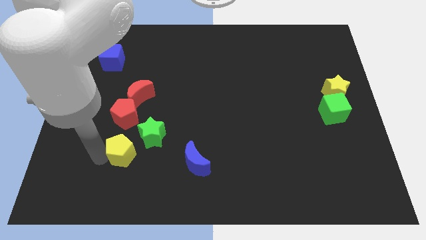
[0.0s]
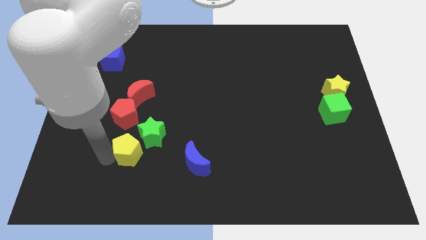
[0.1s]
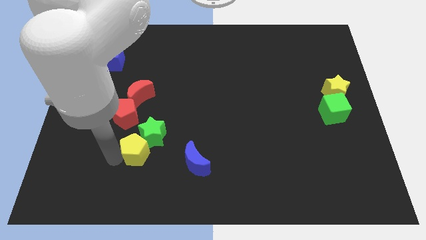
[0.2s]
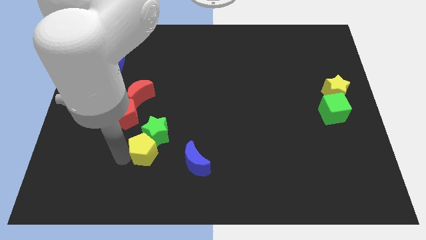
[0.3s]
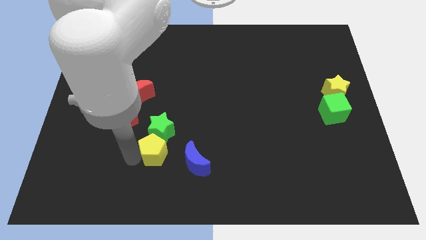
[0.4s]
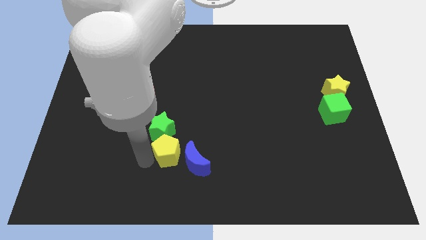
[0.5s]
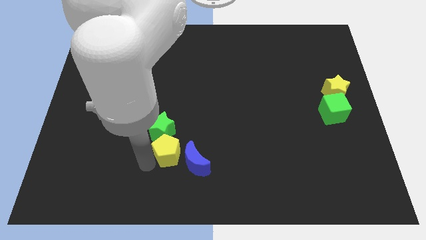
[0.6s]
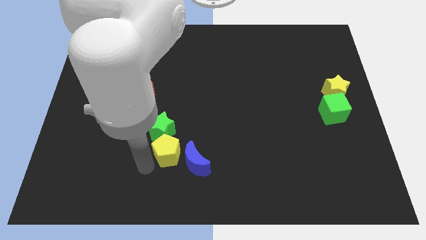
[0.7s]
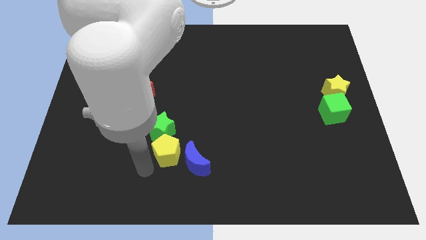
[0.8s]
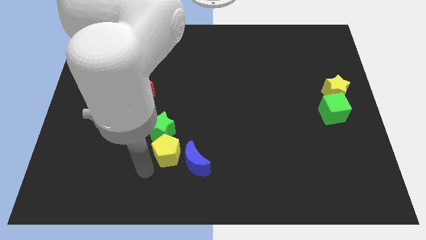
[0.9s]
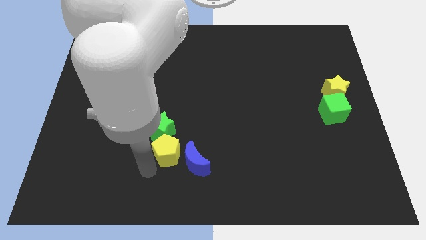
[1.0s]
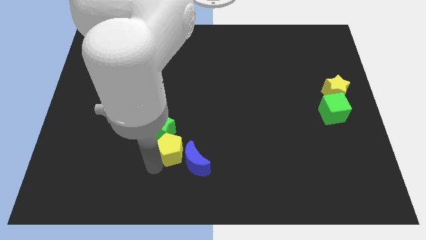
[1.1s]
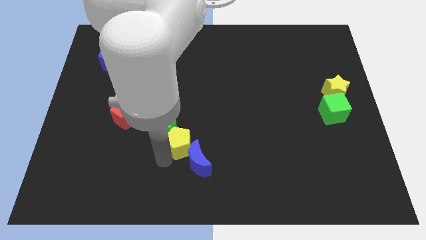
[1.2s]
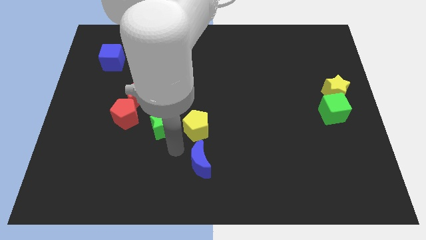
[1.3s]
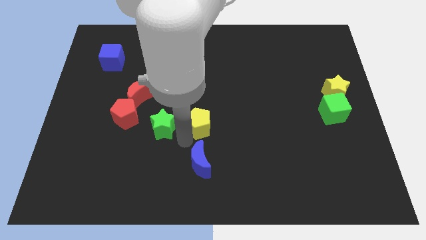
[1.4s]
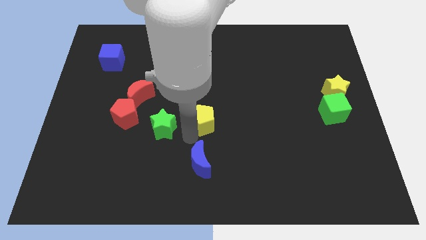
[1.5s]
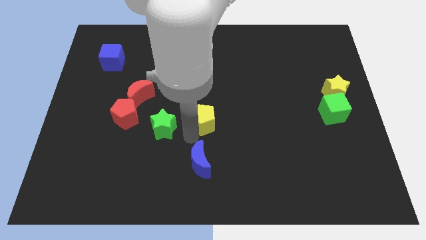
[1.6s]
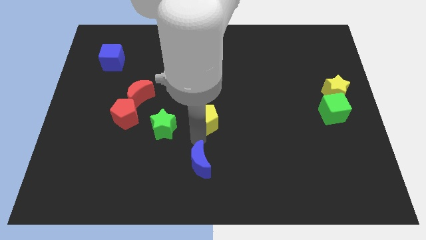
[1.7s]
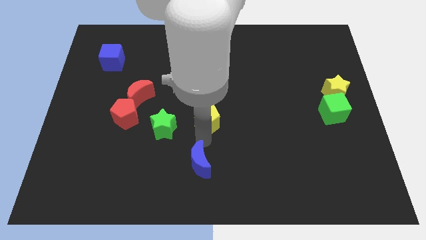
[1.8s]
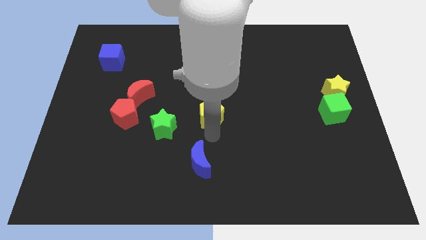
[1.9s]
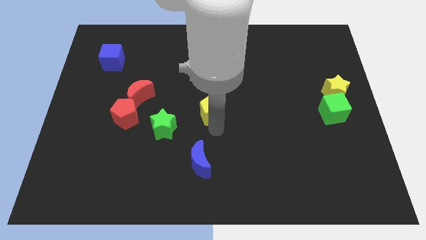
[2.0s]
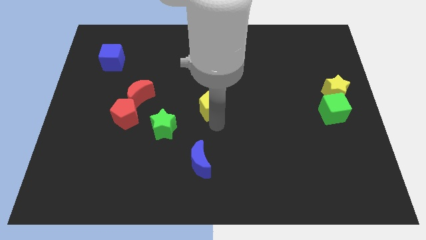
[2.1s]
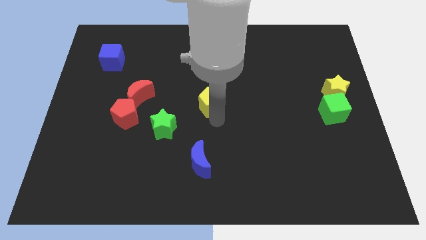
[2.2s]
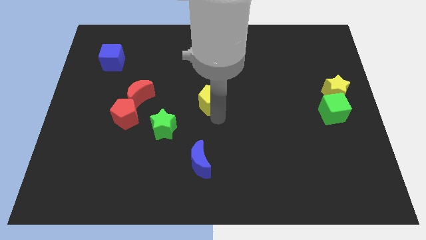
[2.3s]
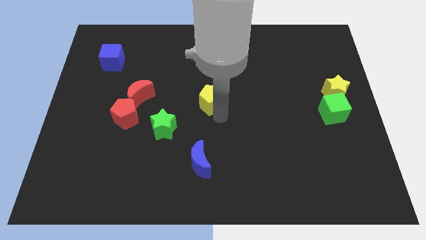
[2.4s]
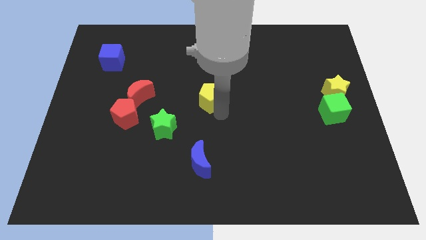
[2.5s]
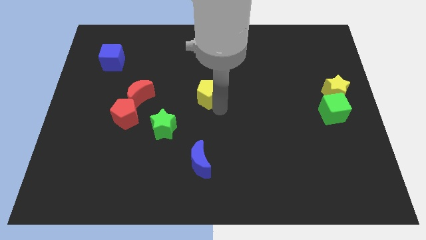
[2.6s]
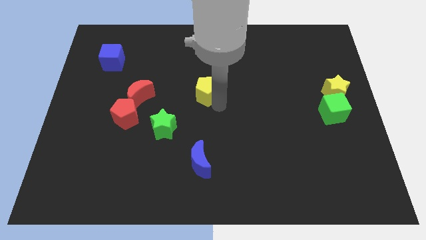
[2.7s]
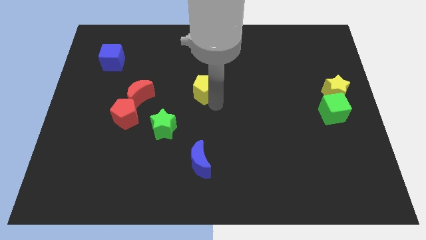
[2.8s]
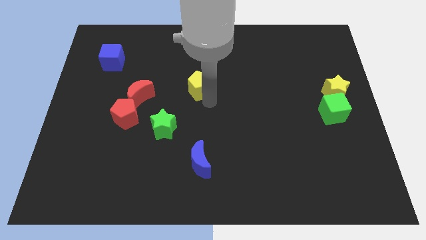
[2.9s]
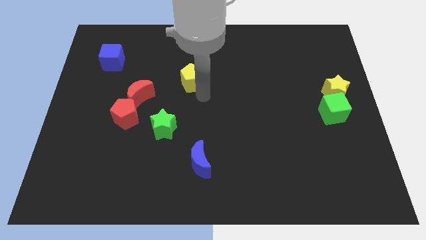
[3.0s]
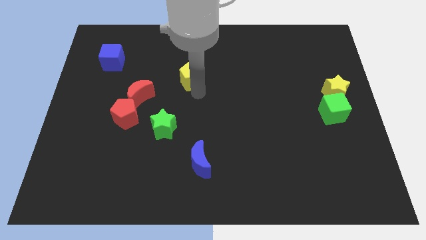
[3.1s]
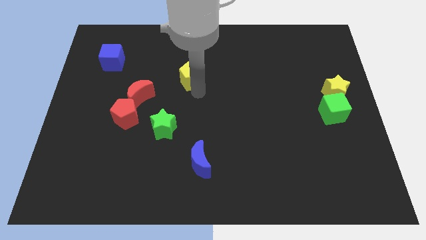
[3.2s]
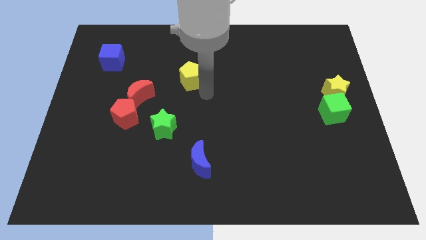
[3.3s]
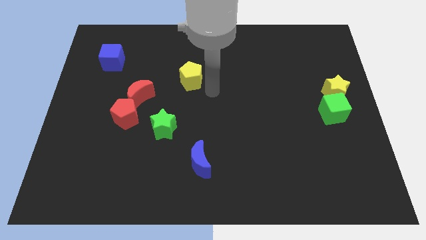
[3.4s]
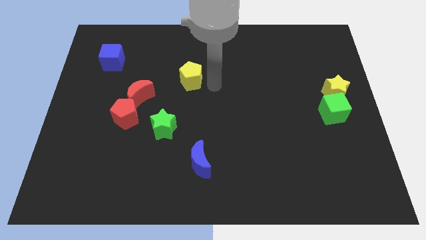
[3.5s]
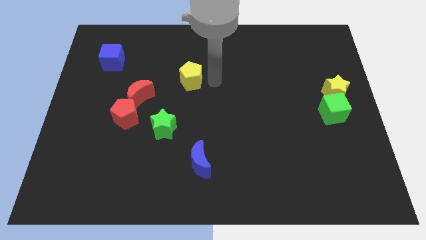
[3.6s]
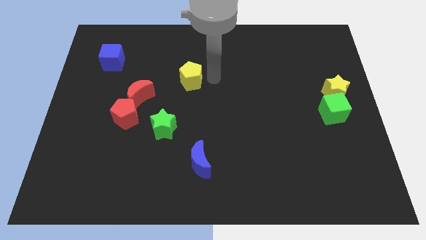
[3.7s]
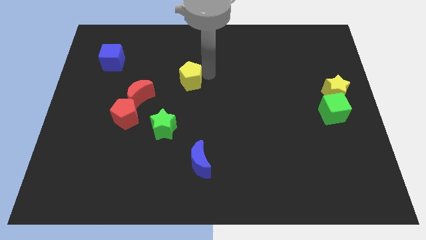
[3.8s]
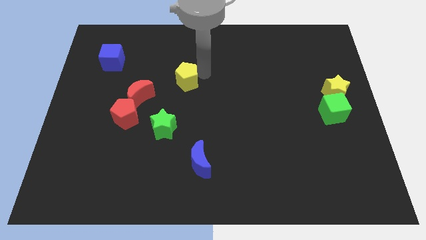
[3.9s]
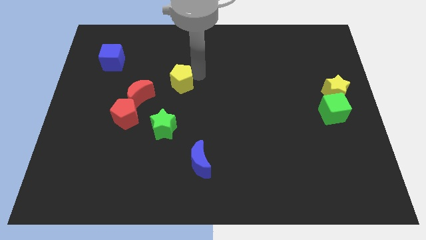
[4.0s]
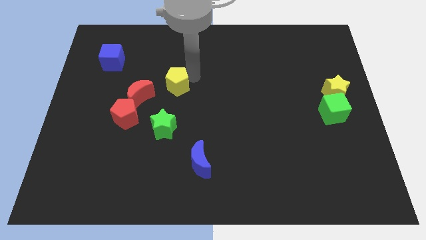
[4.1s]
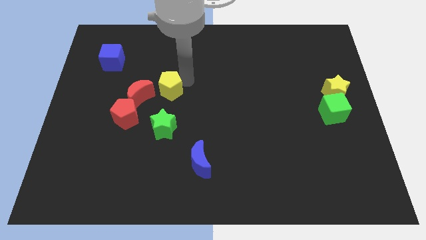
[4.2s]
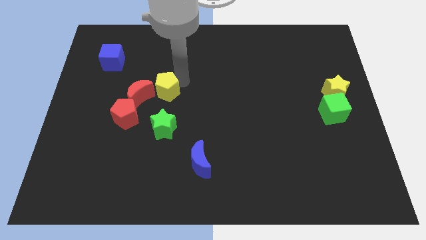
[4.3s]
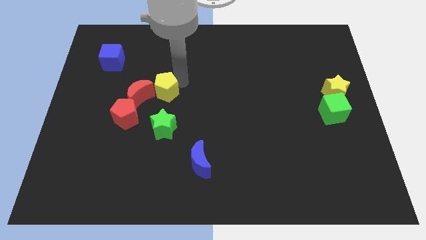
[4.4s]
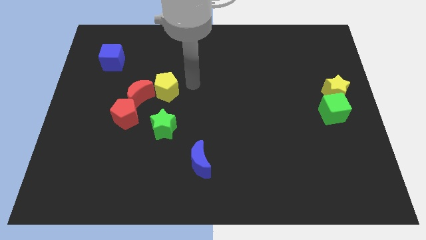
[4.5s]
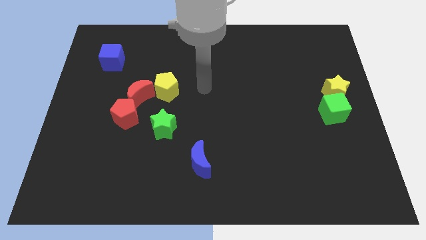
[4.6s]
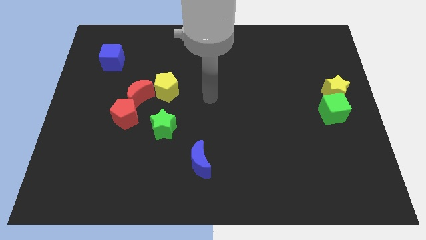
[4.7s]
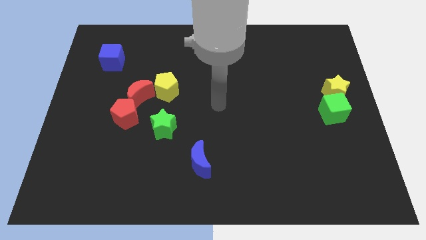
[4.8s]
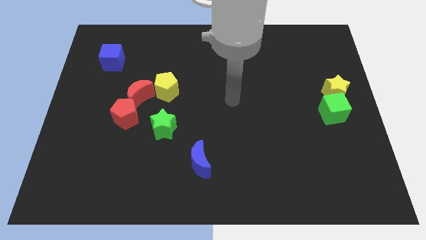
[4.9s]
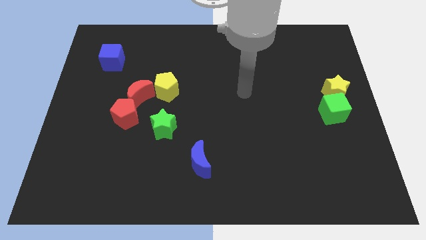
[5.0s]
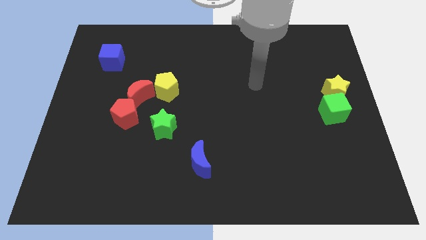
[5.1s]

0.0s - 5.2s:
place the yellow pentagon at the top of the green star

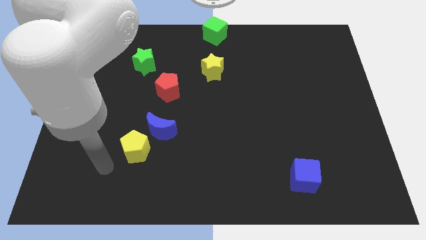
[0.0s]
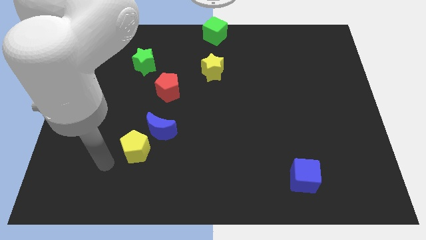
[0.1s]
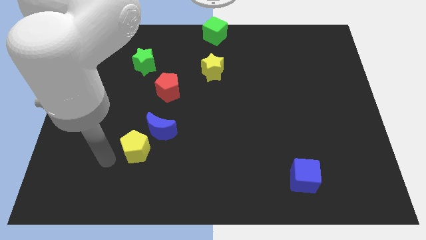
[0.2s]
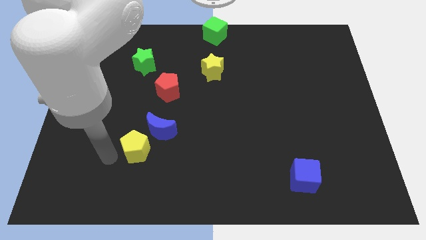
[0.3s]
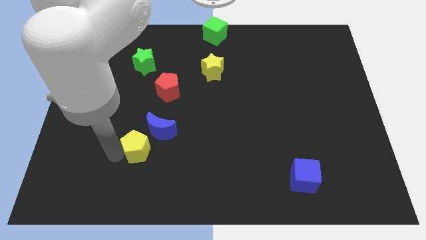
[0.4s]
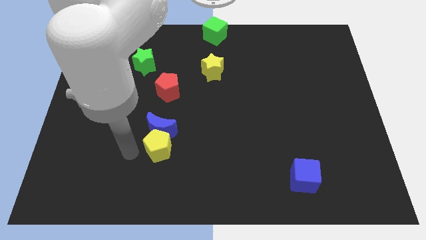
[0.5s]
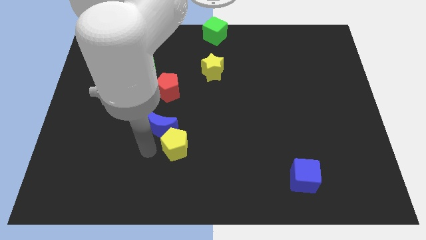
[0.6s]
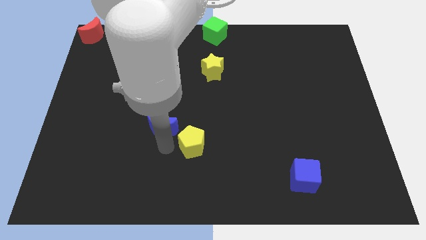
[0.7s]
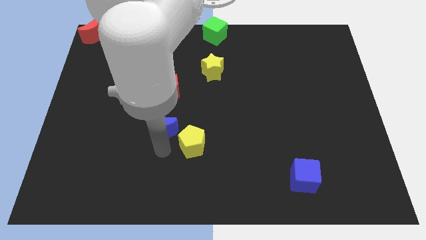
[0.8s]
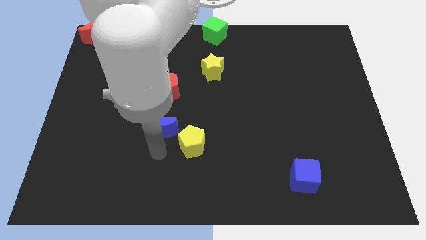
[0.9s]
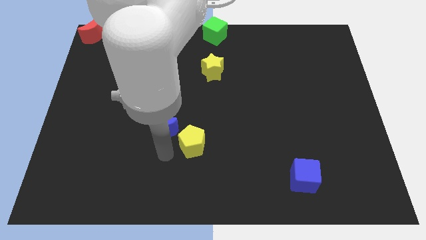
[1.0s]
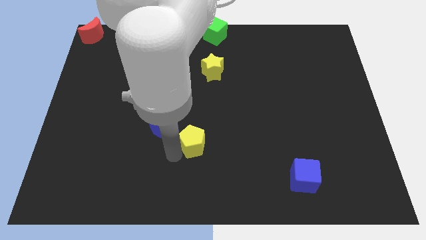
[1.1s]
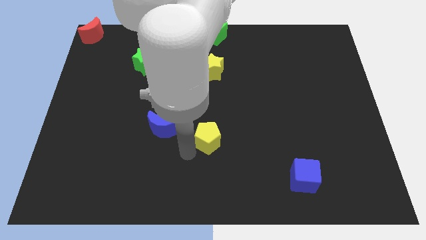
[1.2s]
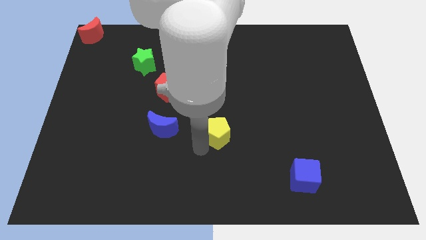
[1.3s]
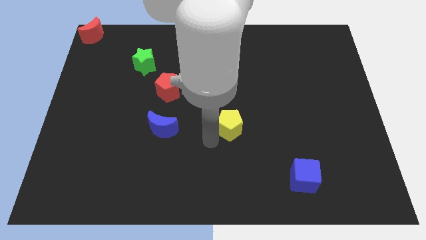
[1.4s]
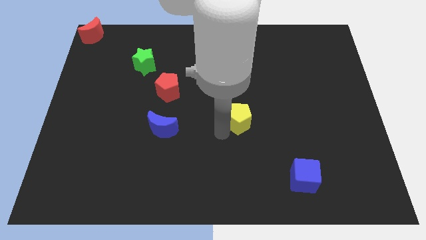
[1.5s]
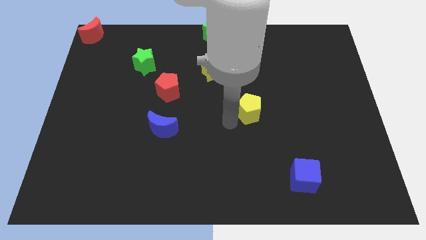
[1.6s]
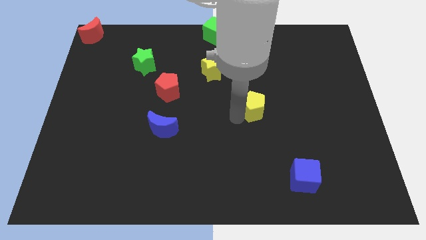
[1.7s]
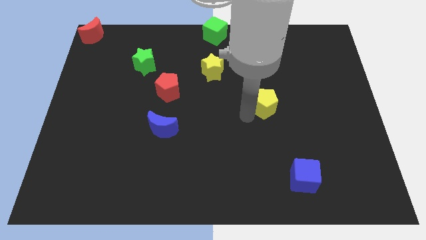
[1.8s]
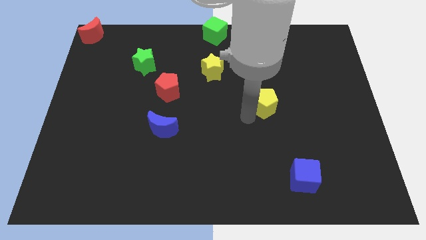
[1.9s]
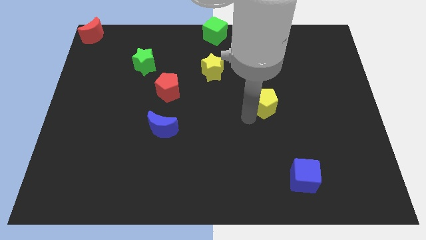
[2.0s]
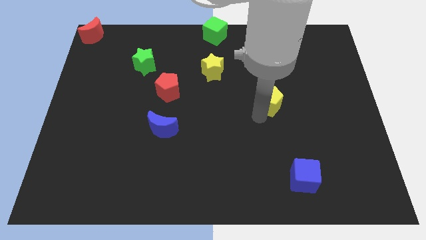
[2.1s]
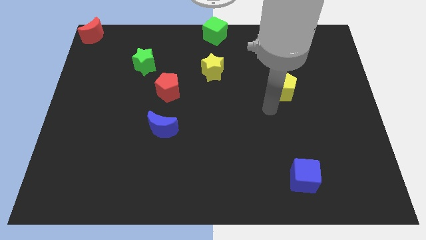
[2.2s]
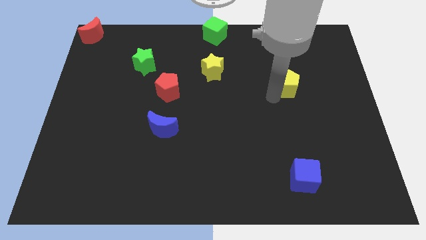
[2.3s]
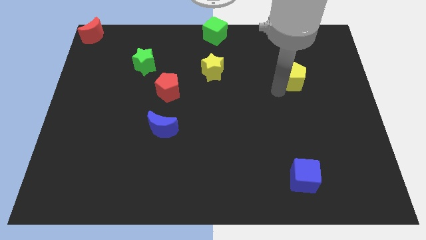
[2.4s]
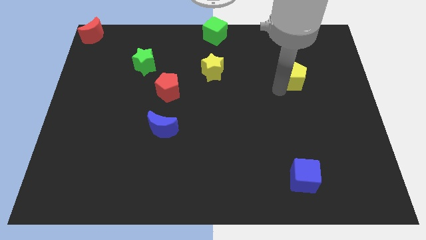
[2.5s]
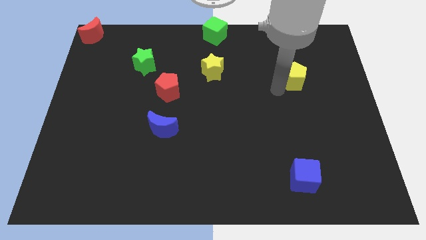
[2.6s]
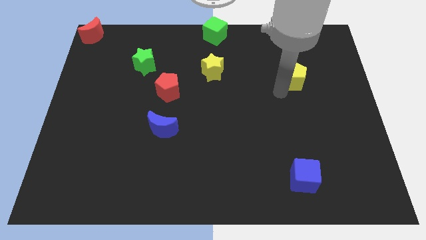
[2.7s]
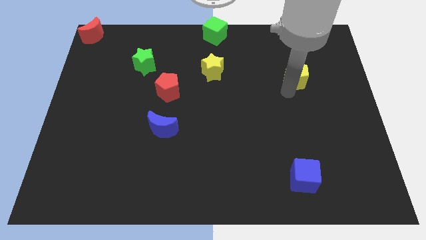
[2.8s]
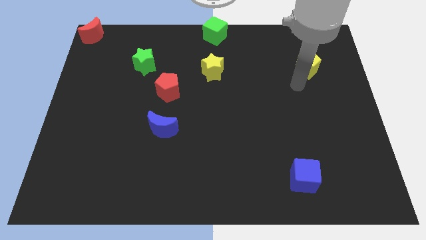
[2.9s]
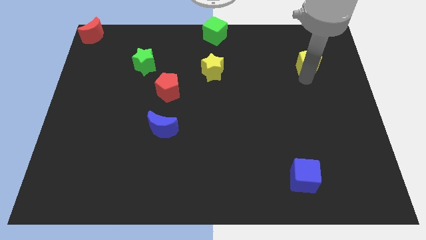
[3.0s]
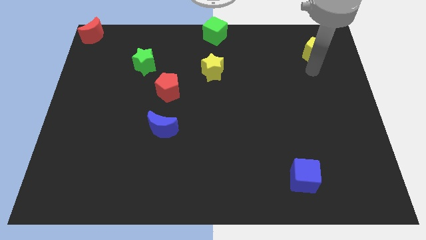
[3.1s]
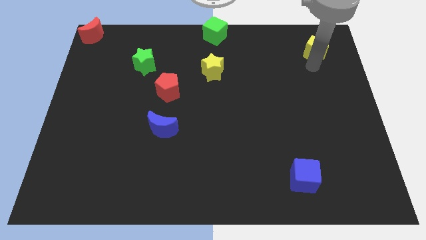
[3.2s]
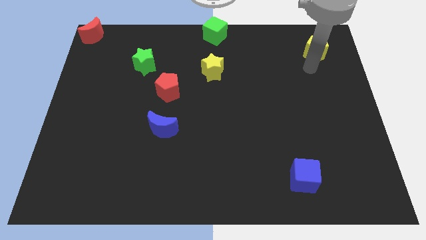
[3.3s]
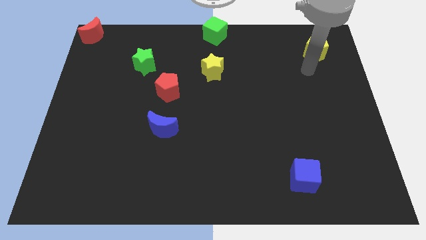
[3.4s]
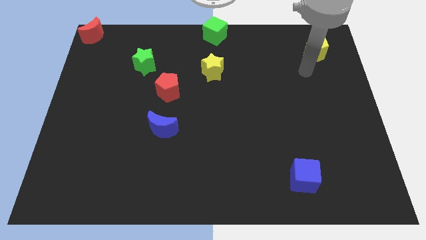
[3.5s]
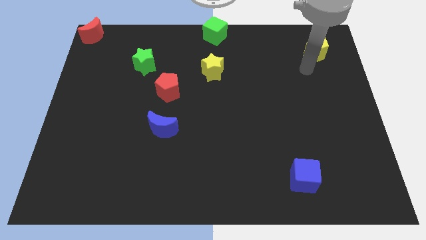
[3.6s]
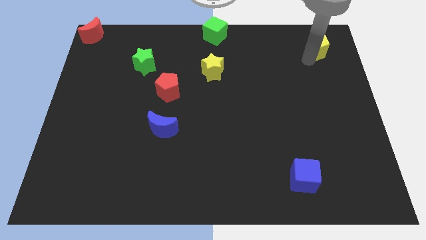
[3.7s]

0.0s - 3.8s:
place the yellow pentagon vertically above the blue cube

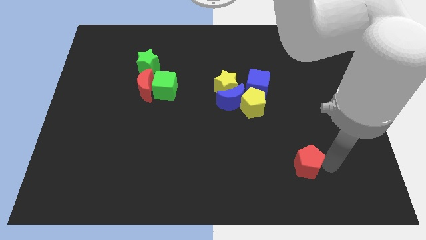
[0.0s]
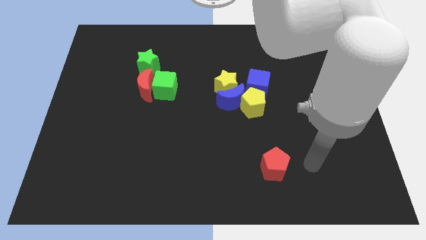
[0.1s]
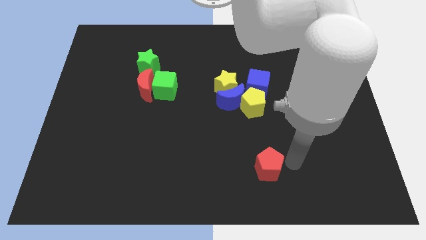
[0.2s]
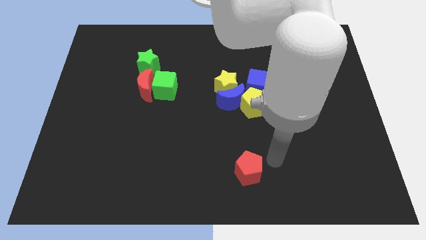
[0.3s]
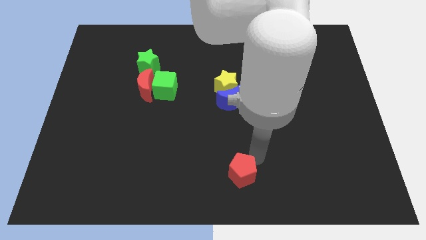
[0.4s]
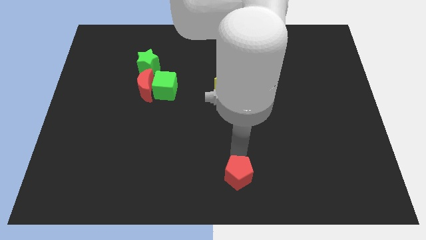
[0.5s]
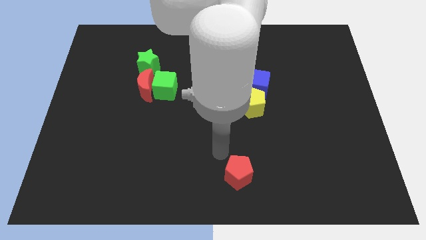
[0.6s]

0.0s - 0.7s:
move the red pentagon to the bottom center
